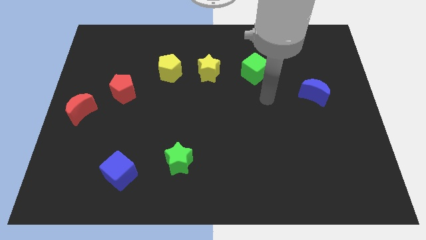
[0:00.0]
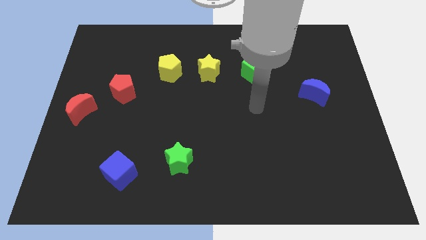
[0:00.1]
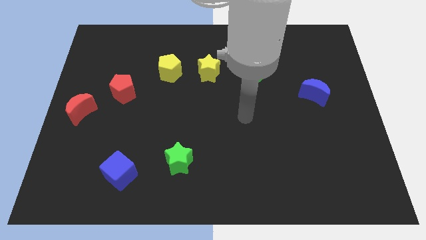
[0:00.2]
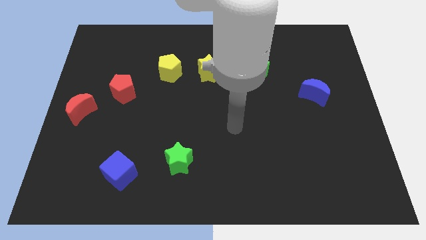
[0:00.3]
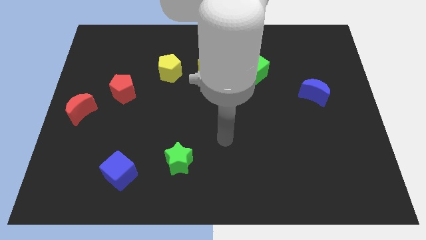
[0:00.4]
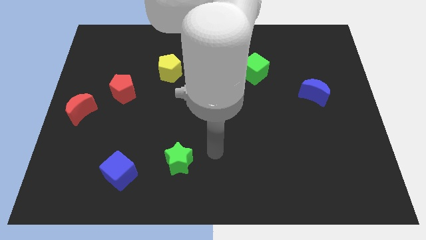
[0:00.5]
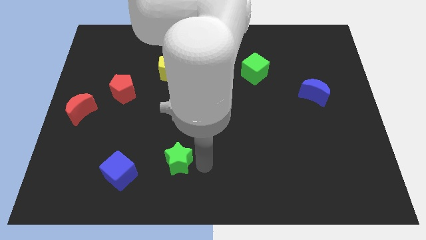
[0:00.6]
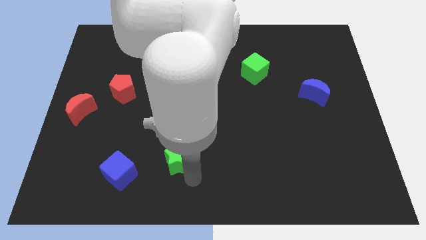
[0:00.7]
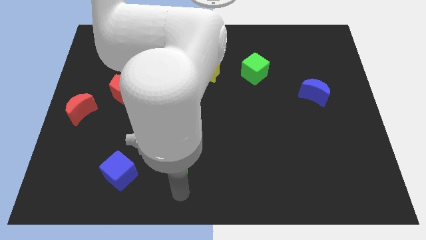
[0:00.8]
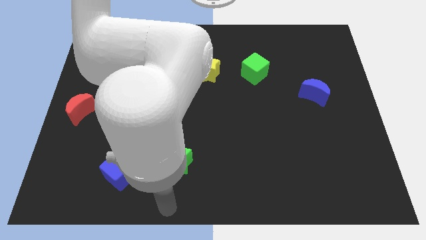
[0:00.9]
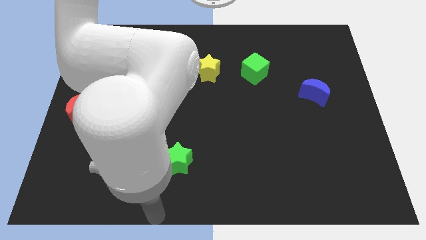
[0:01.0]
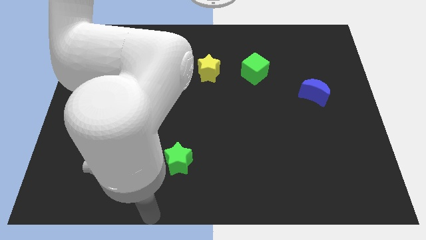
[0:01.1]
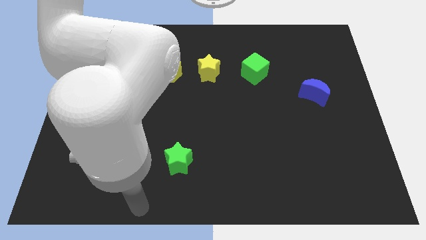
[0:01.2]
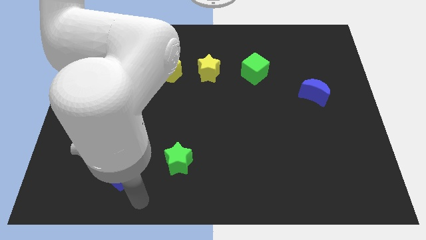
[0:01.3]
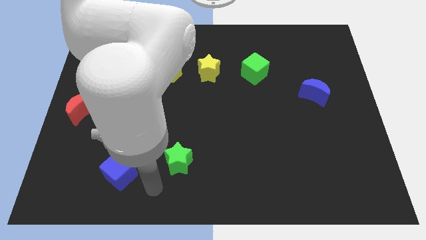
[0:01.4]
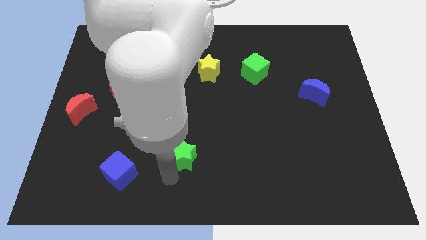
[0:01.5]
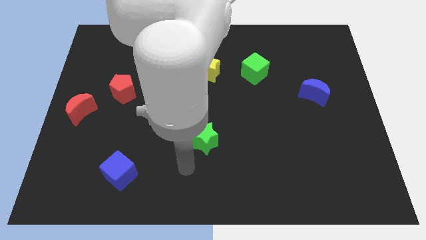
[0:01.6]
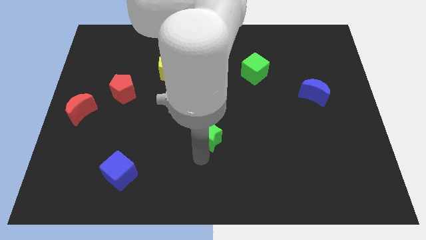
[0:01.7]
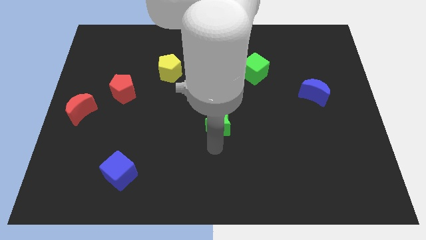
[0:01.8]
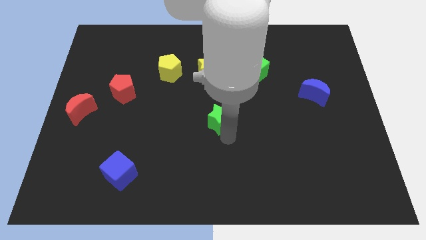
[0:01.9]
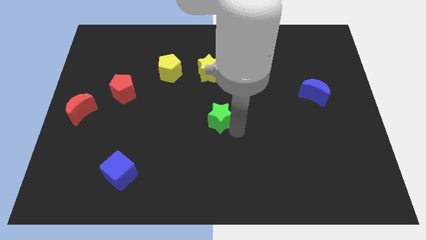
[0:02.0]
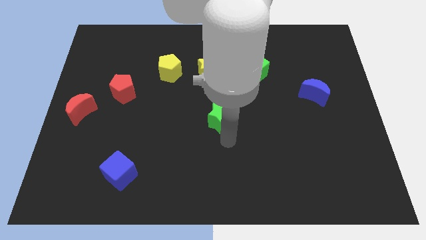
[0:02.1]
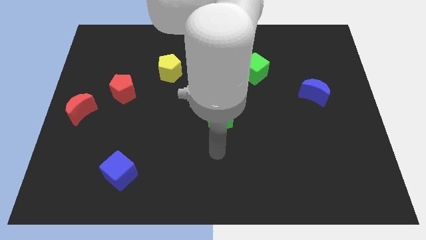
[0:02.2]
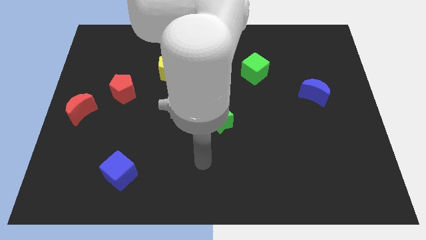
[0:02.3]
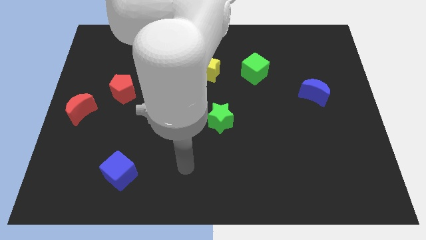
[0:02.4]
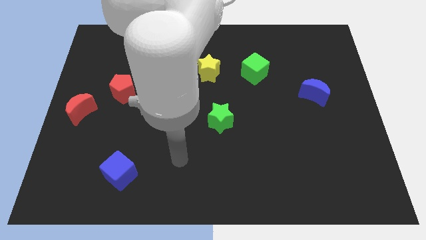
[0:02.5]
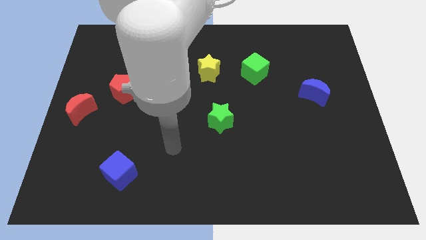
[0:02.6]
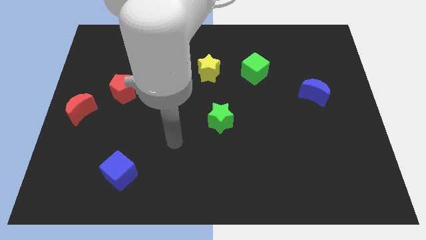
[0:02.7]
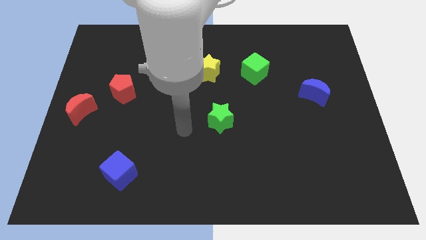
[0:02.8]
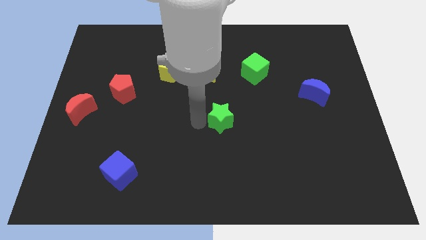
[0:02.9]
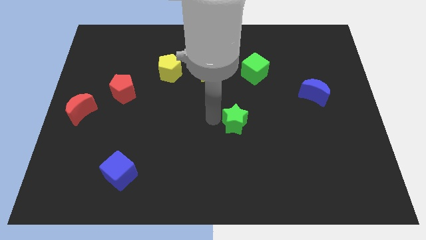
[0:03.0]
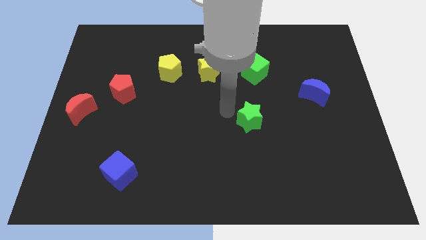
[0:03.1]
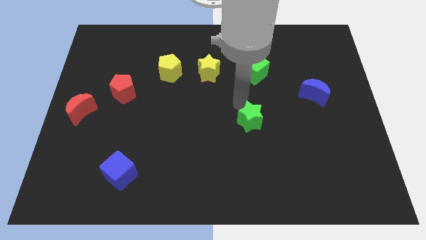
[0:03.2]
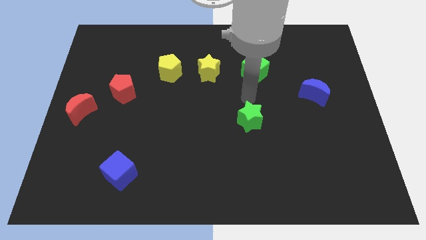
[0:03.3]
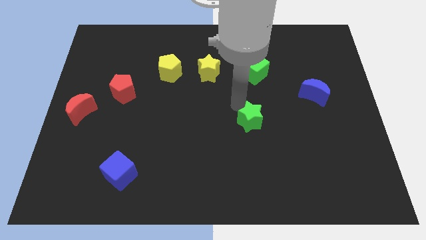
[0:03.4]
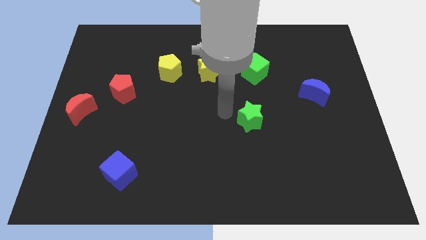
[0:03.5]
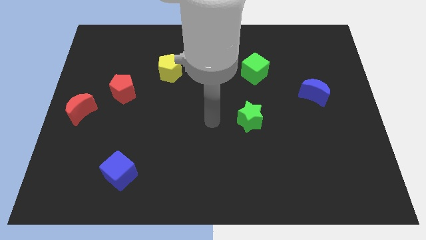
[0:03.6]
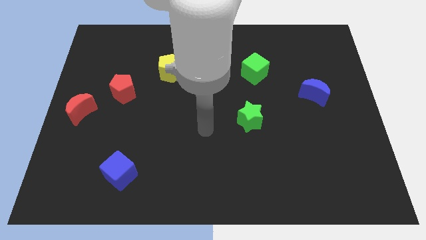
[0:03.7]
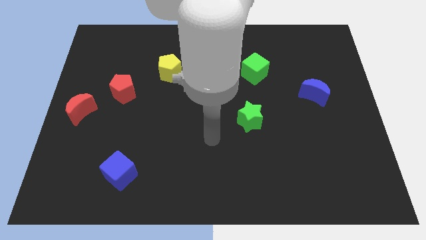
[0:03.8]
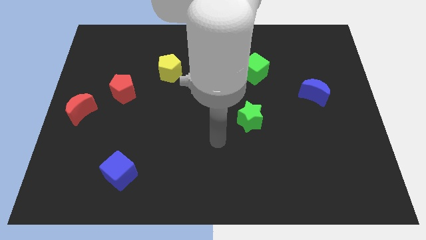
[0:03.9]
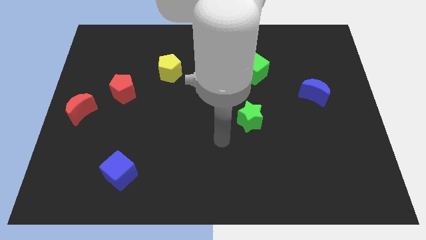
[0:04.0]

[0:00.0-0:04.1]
move the green star underneath the green cube

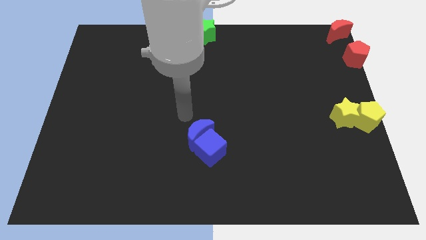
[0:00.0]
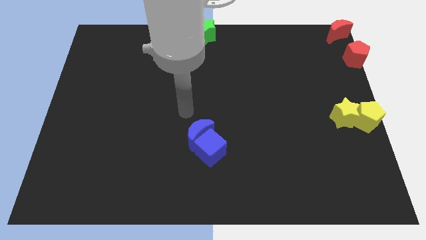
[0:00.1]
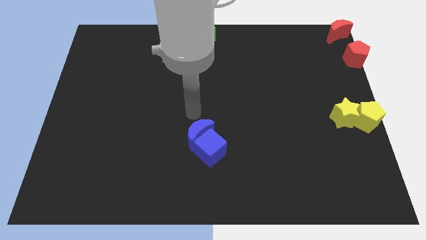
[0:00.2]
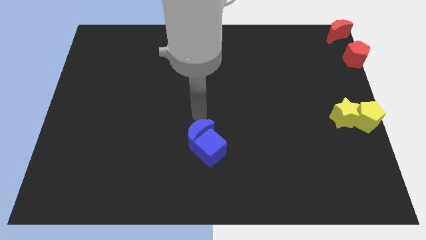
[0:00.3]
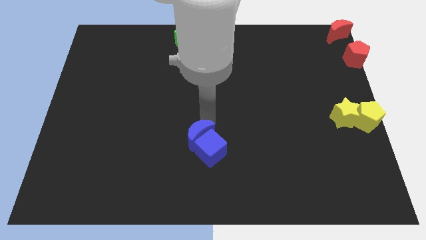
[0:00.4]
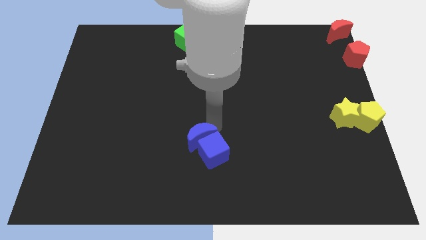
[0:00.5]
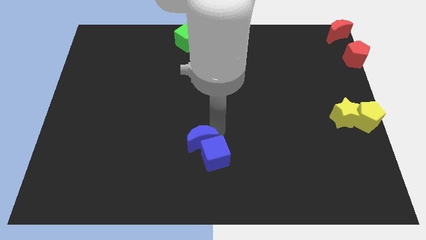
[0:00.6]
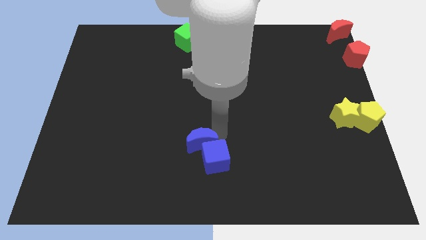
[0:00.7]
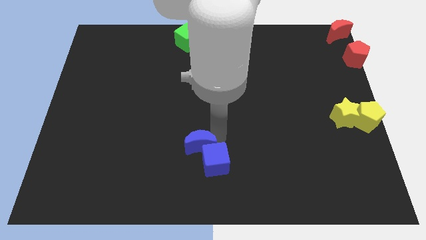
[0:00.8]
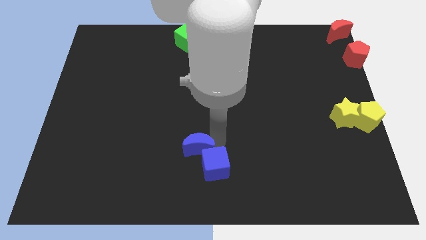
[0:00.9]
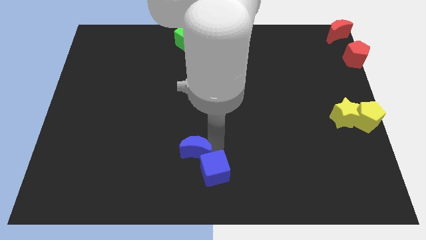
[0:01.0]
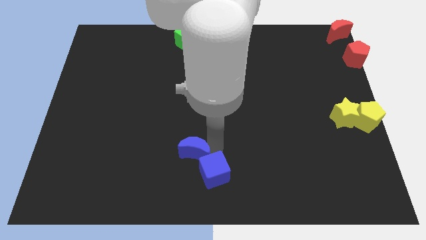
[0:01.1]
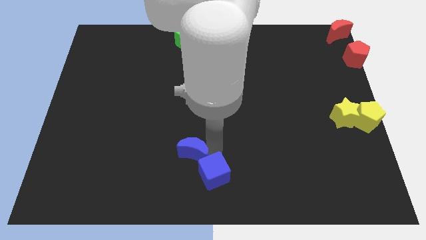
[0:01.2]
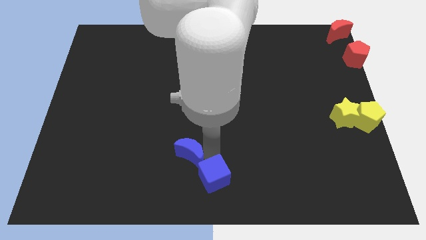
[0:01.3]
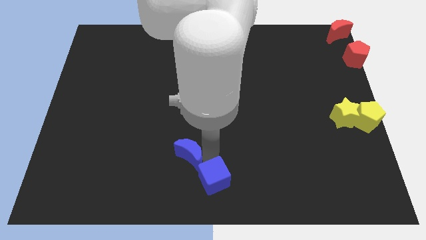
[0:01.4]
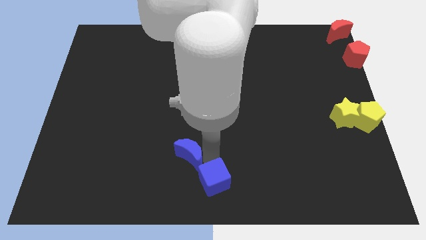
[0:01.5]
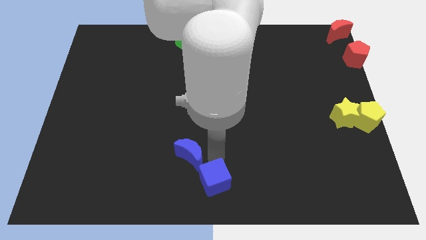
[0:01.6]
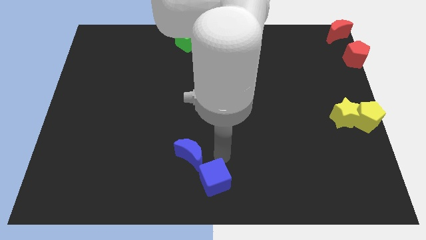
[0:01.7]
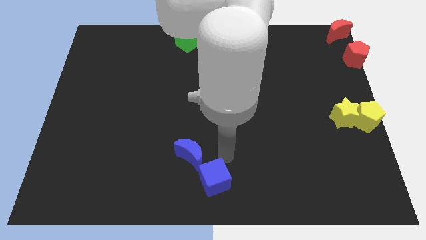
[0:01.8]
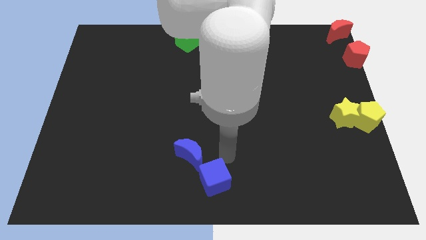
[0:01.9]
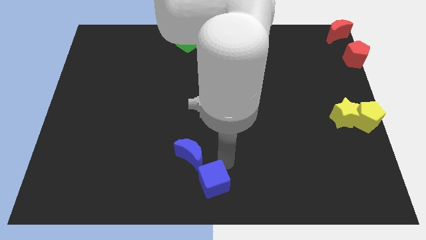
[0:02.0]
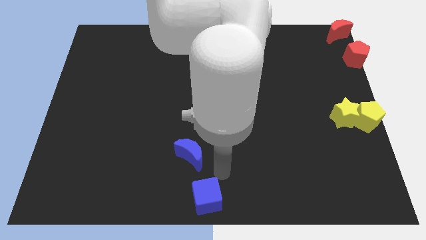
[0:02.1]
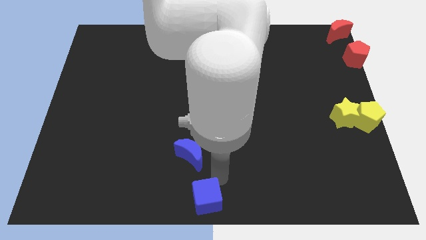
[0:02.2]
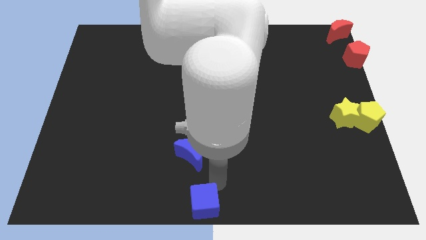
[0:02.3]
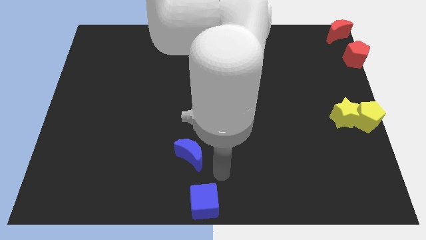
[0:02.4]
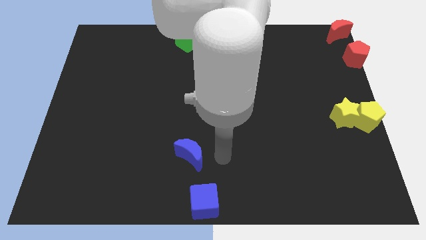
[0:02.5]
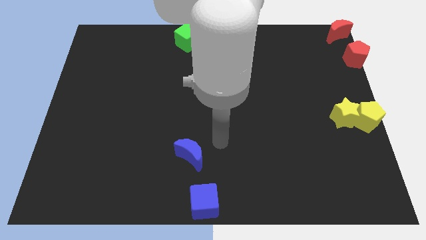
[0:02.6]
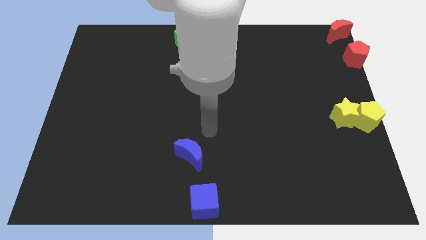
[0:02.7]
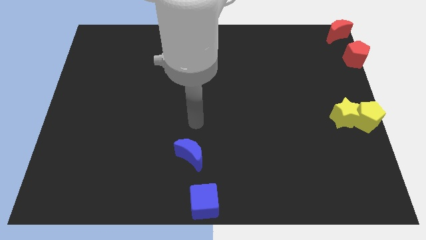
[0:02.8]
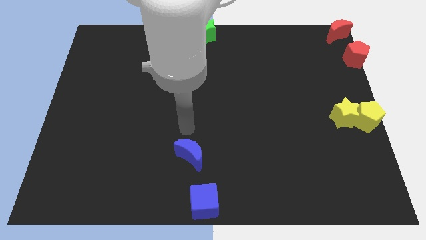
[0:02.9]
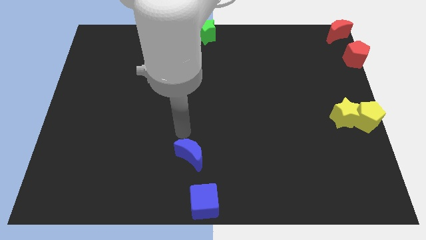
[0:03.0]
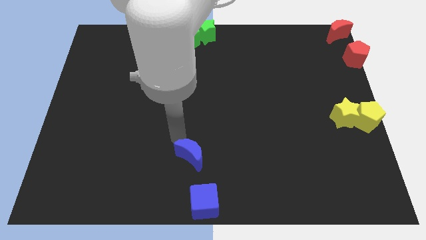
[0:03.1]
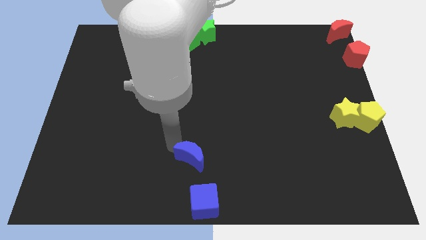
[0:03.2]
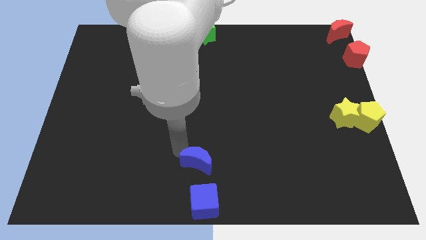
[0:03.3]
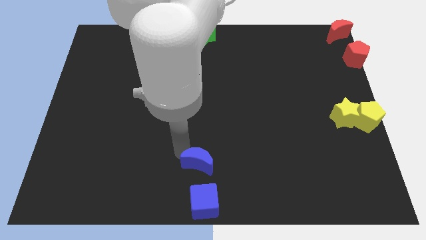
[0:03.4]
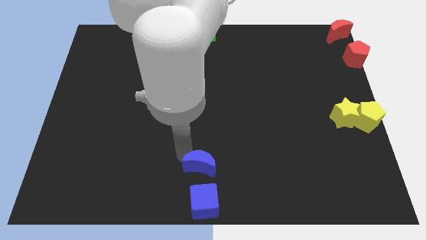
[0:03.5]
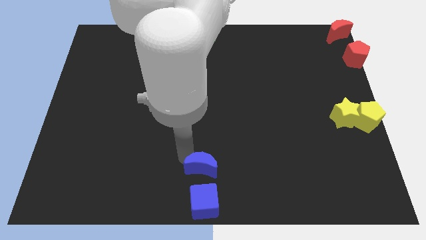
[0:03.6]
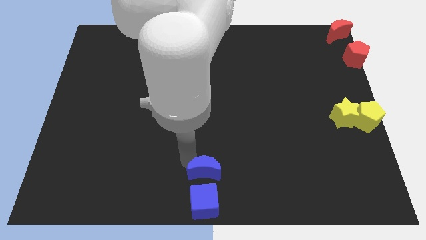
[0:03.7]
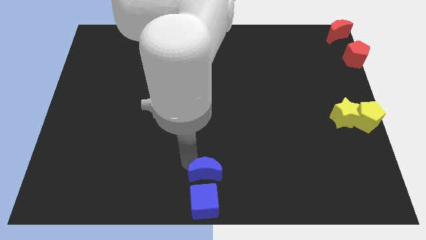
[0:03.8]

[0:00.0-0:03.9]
move the blue cube to the center of the board

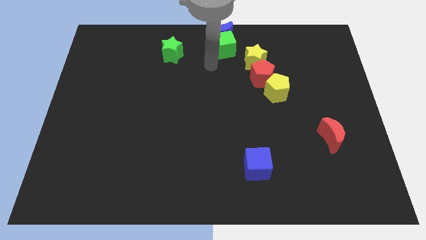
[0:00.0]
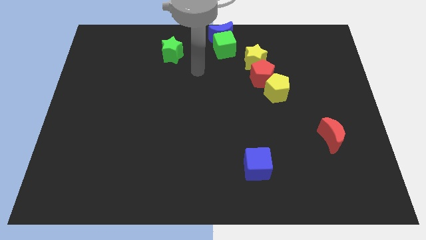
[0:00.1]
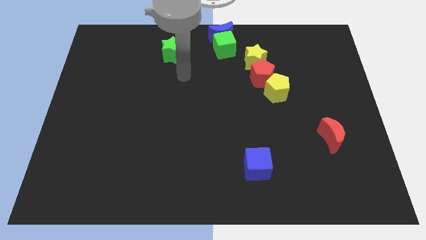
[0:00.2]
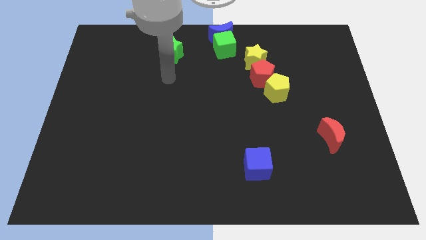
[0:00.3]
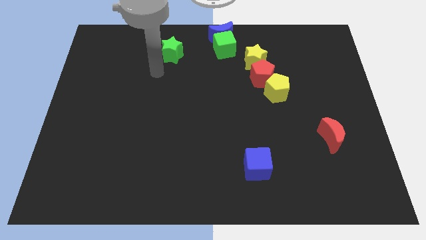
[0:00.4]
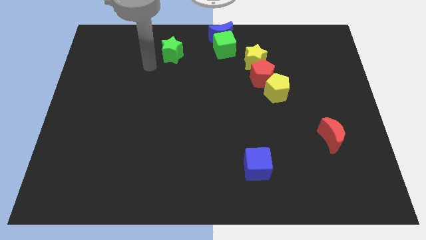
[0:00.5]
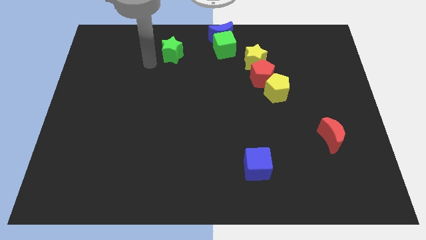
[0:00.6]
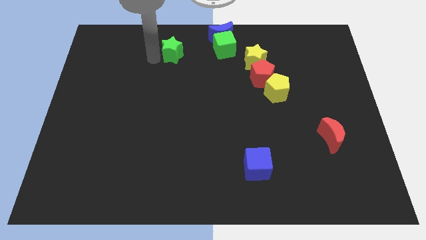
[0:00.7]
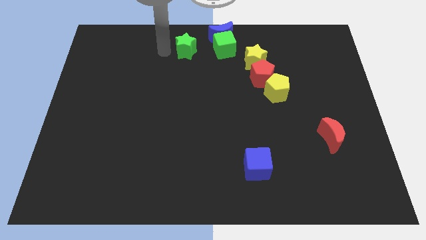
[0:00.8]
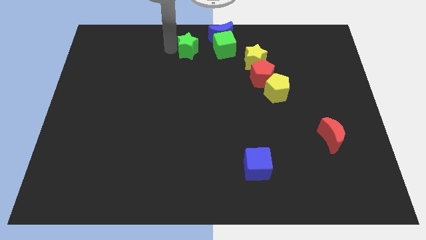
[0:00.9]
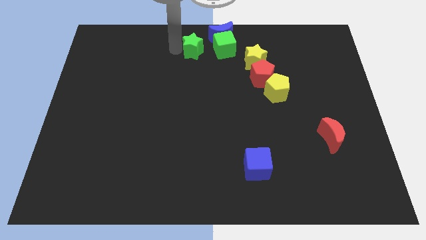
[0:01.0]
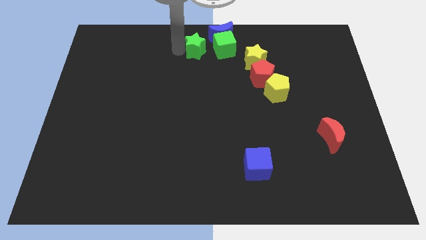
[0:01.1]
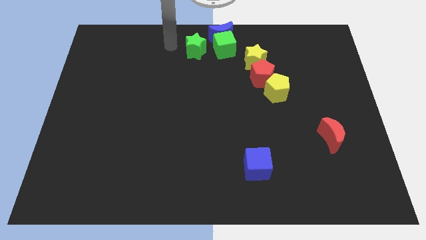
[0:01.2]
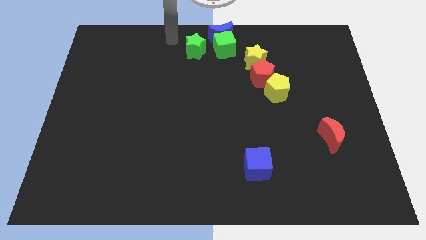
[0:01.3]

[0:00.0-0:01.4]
push the green star towards green cube
